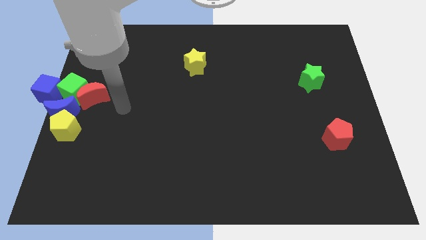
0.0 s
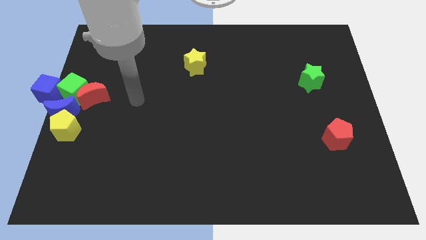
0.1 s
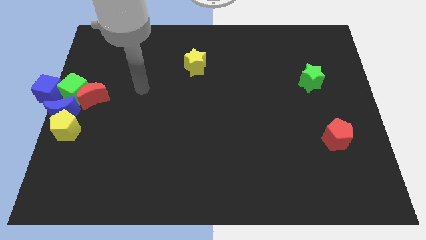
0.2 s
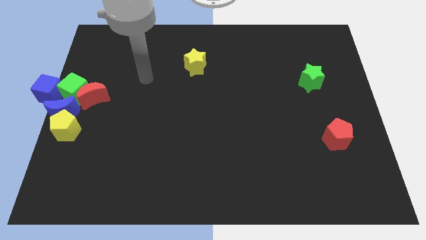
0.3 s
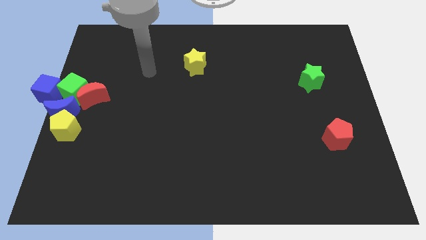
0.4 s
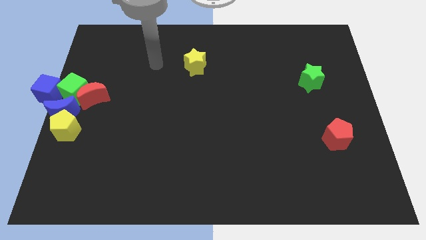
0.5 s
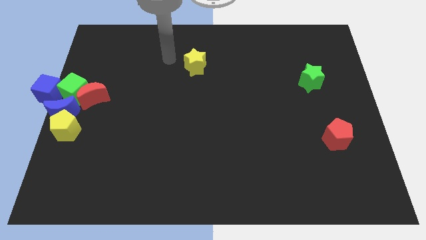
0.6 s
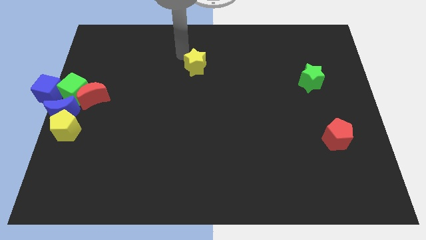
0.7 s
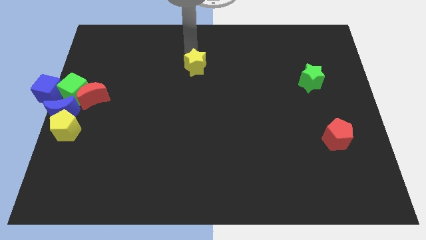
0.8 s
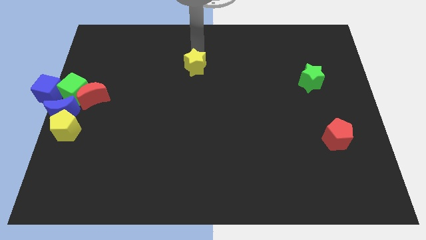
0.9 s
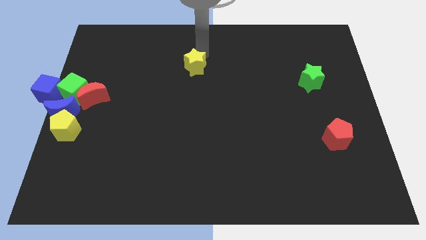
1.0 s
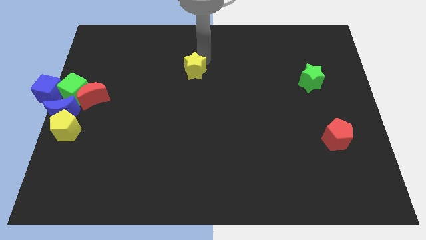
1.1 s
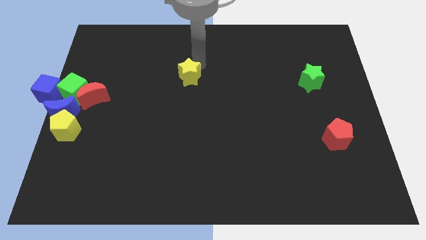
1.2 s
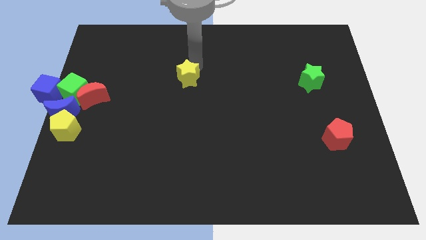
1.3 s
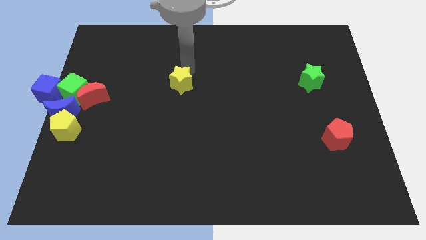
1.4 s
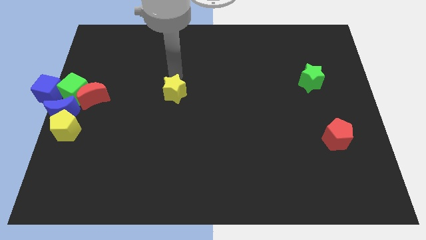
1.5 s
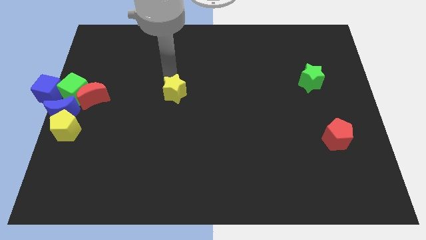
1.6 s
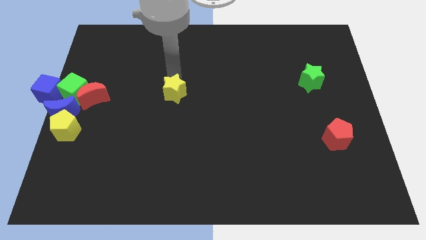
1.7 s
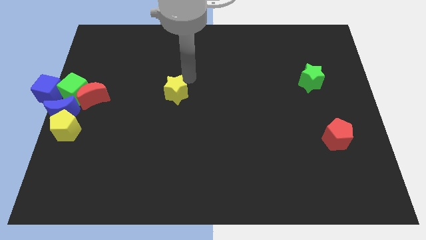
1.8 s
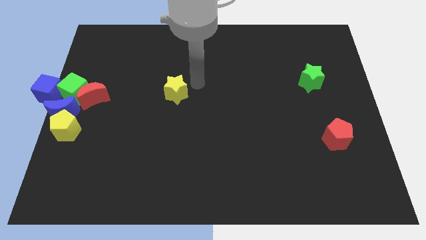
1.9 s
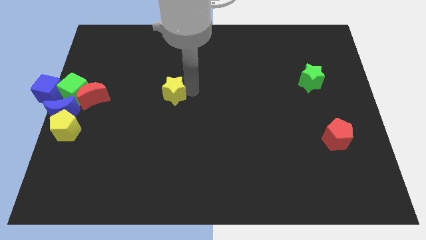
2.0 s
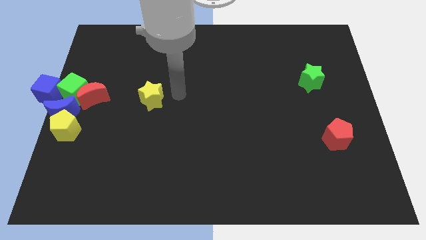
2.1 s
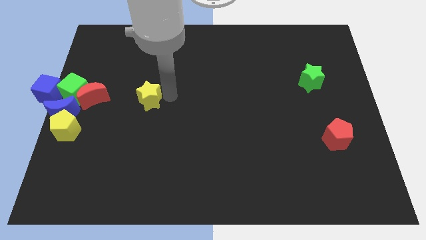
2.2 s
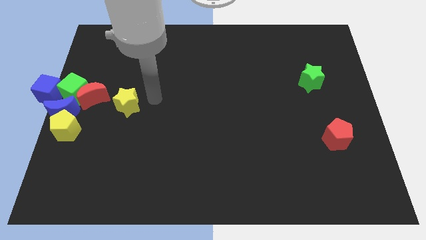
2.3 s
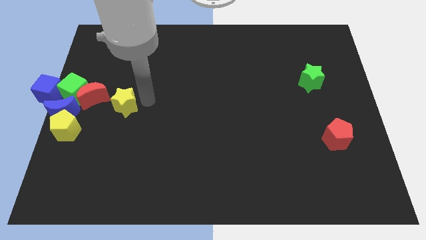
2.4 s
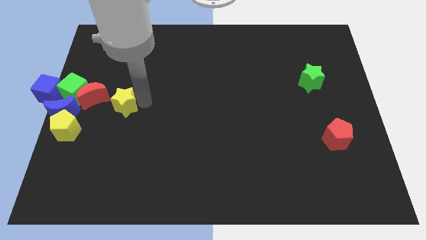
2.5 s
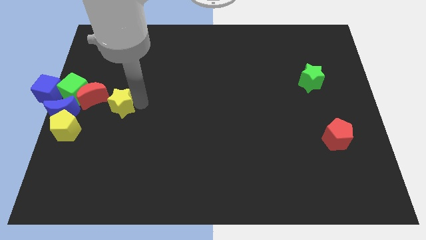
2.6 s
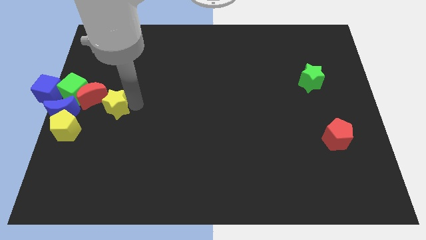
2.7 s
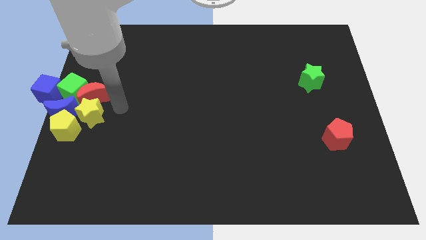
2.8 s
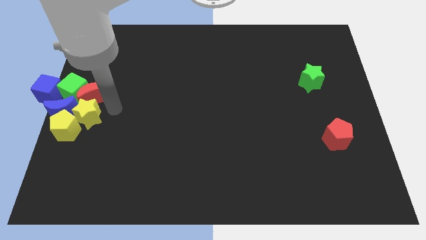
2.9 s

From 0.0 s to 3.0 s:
place the yellow star right to the yellow pentagon

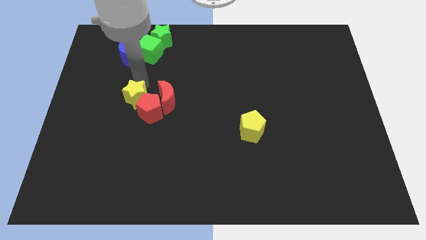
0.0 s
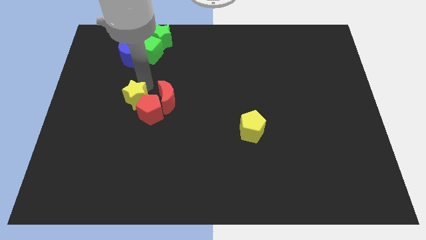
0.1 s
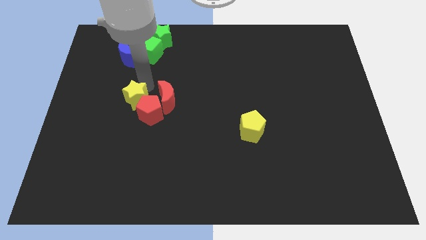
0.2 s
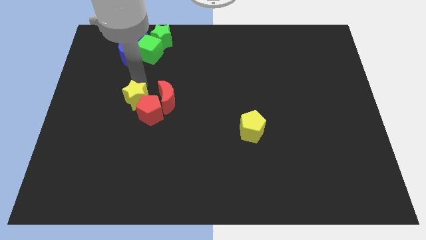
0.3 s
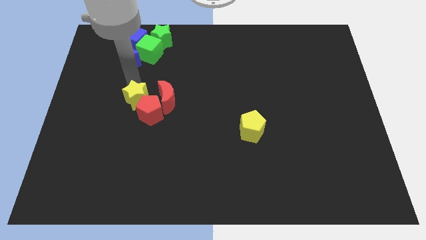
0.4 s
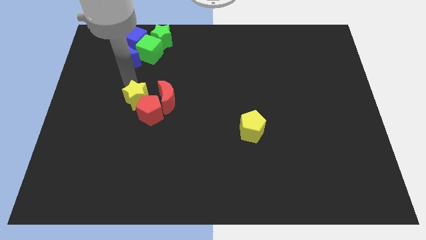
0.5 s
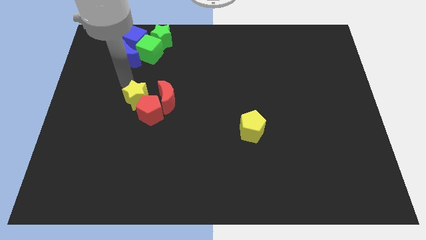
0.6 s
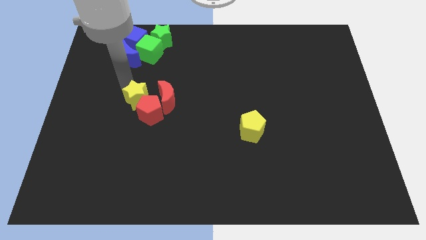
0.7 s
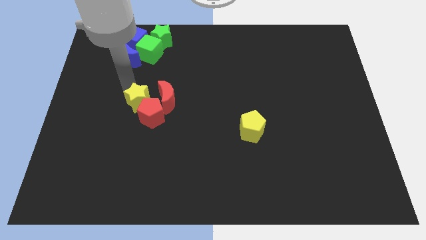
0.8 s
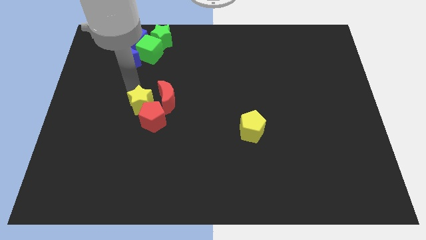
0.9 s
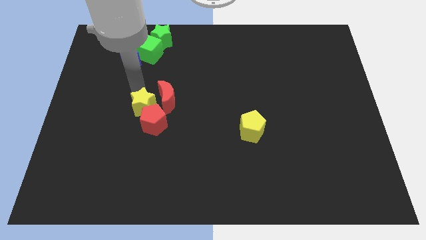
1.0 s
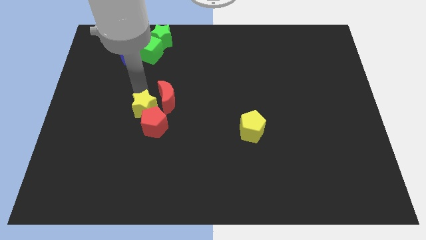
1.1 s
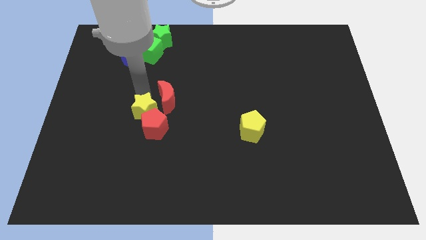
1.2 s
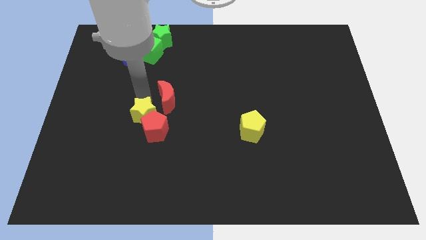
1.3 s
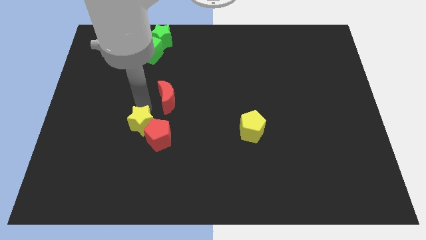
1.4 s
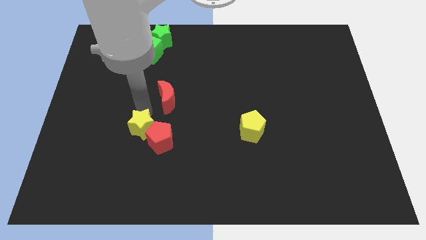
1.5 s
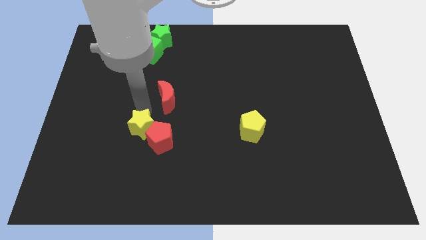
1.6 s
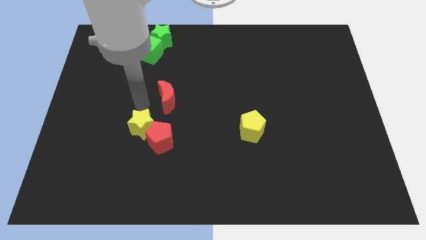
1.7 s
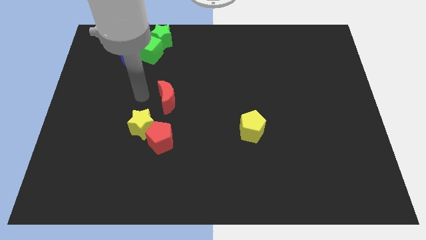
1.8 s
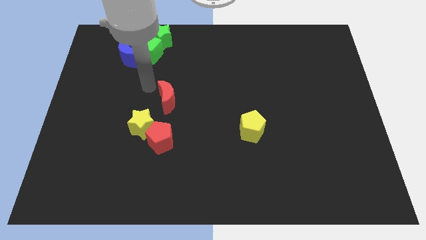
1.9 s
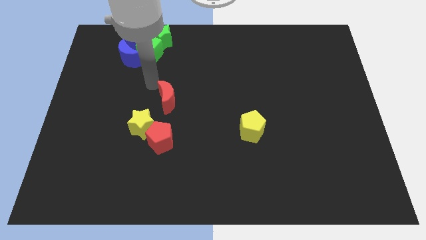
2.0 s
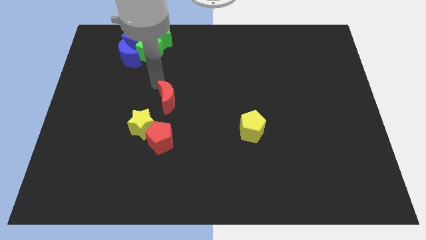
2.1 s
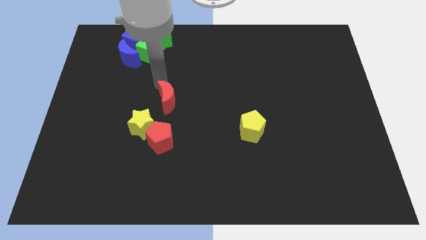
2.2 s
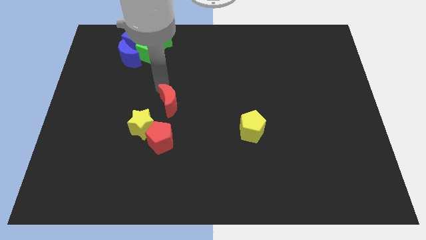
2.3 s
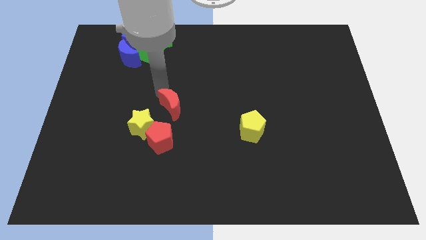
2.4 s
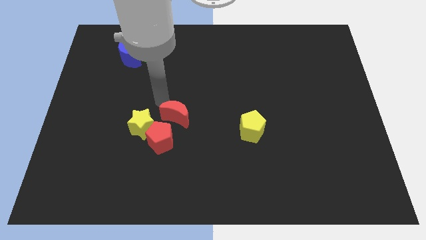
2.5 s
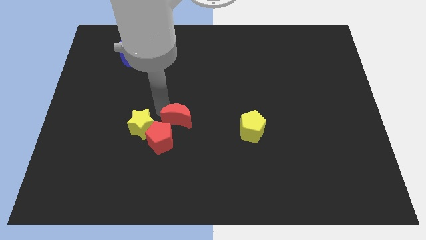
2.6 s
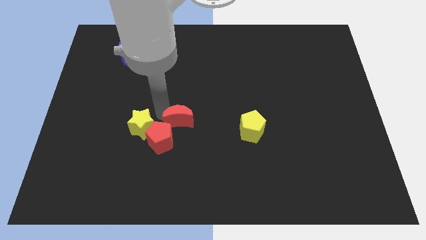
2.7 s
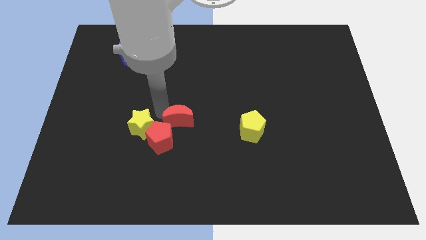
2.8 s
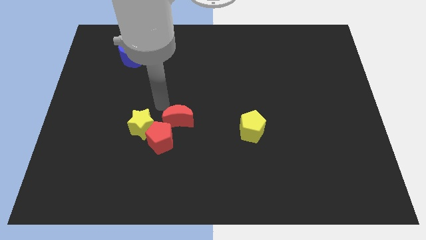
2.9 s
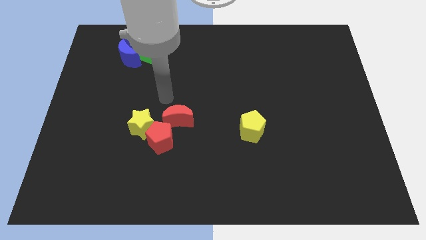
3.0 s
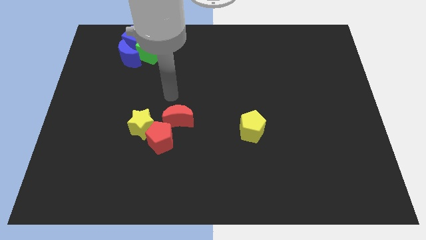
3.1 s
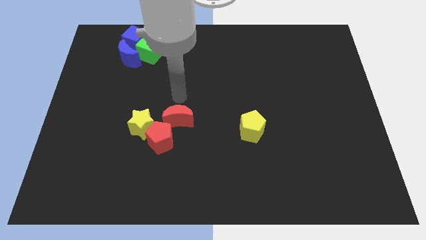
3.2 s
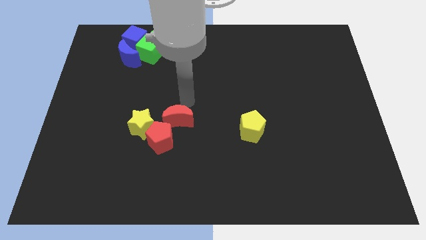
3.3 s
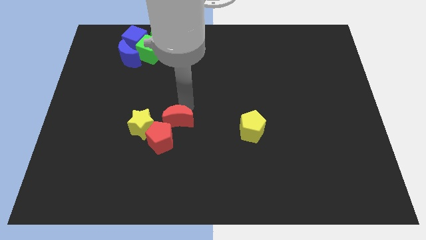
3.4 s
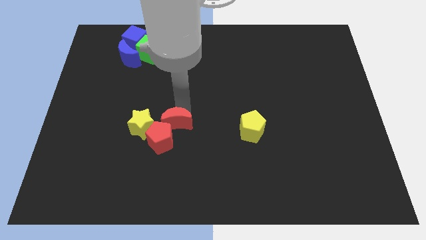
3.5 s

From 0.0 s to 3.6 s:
place the red crescent above the red pentagon

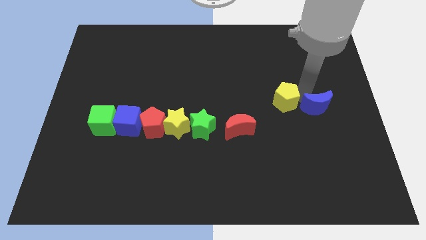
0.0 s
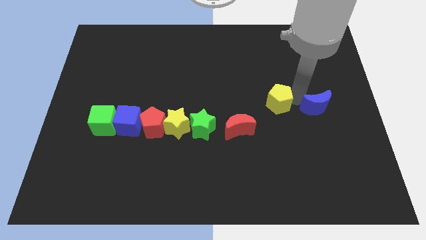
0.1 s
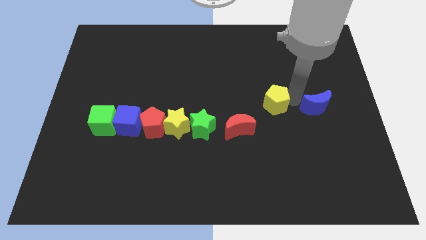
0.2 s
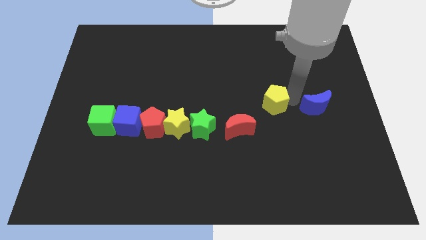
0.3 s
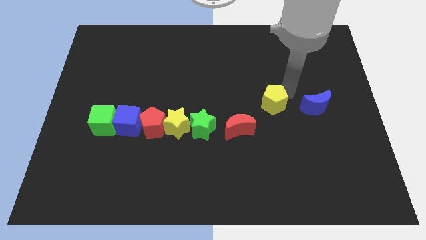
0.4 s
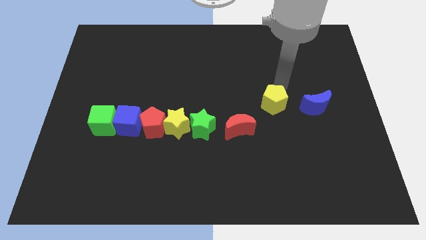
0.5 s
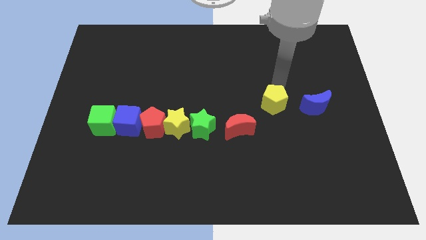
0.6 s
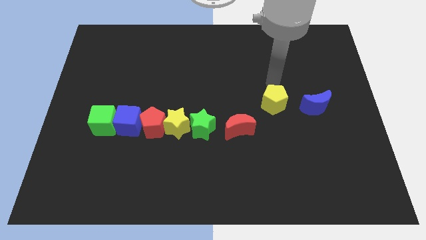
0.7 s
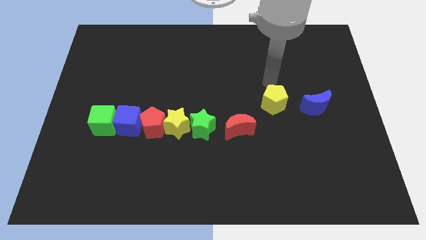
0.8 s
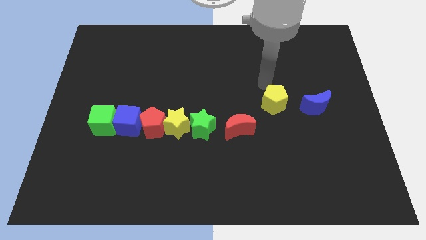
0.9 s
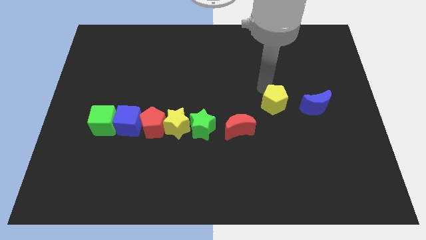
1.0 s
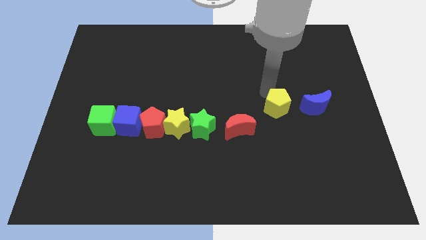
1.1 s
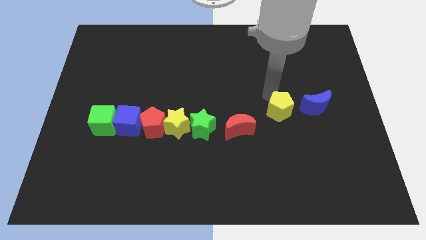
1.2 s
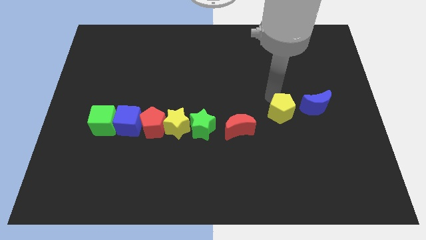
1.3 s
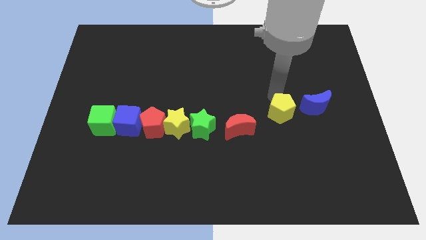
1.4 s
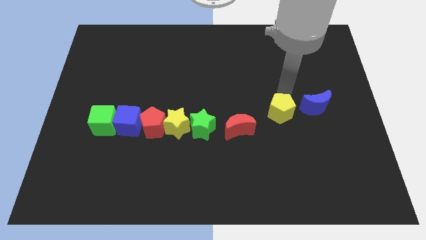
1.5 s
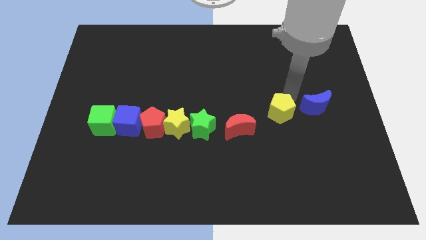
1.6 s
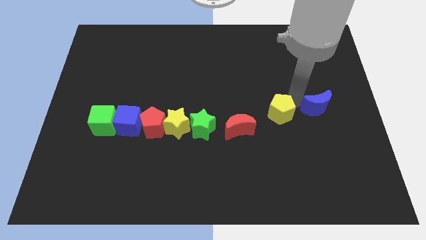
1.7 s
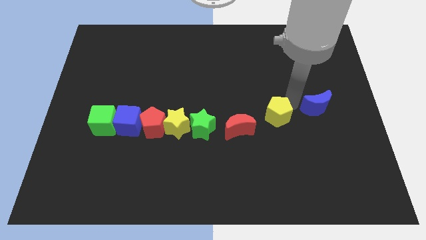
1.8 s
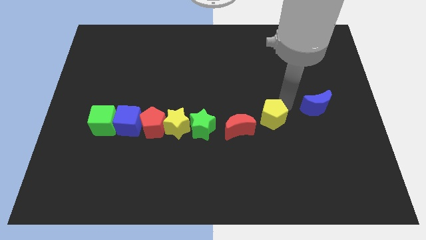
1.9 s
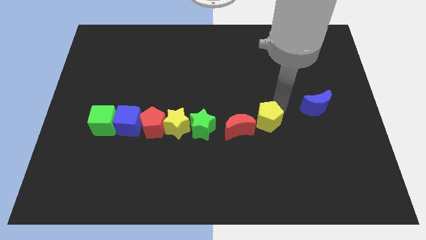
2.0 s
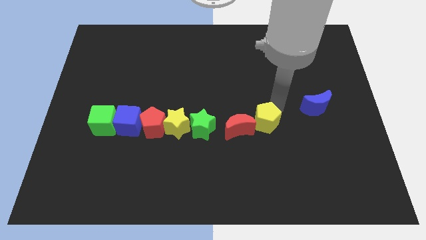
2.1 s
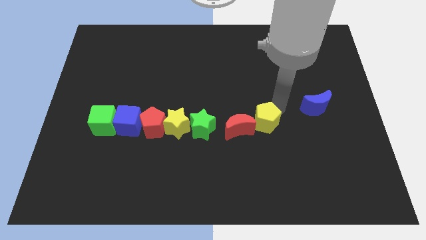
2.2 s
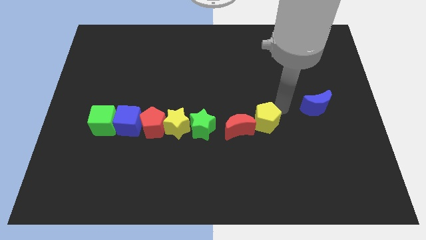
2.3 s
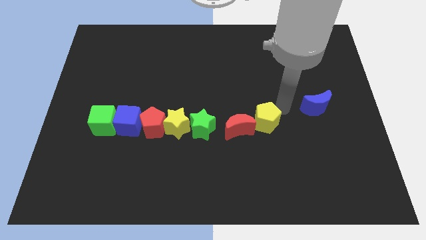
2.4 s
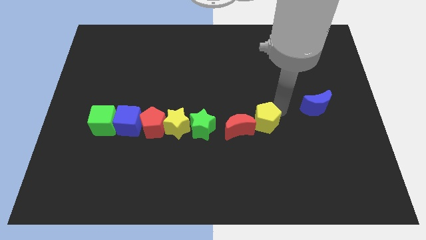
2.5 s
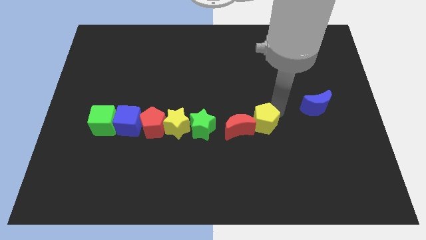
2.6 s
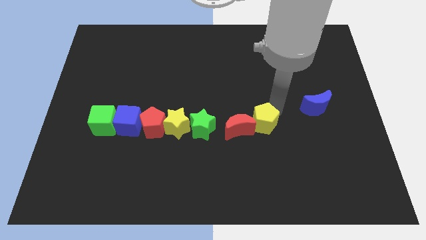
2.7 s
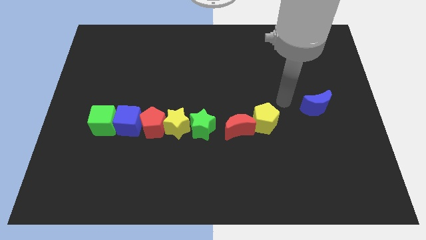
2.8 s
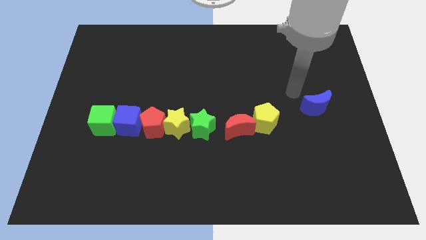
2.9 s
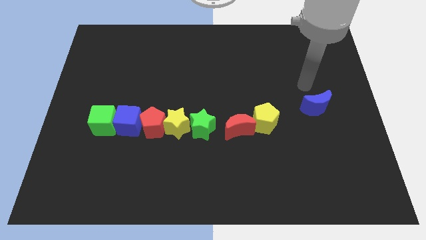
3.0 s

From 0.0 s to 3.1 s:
move the yellow pentagon into the red crescent
